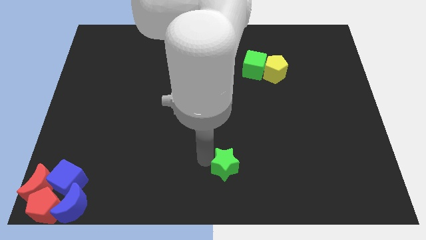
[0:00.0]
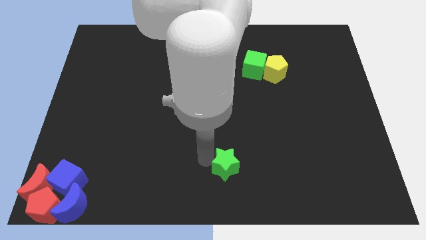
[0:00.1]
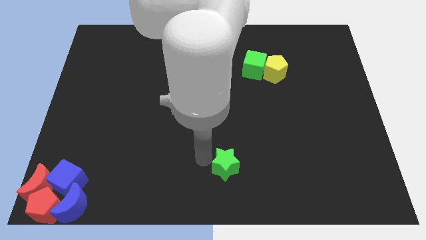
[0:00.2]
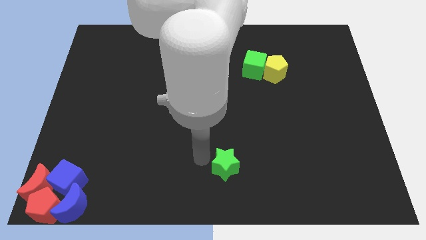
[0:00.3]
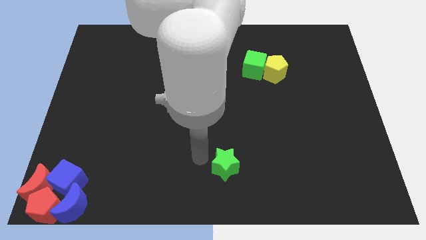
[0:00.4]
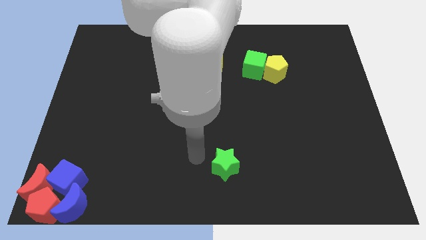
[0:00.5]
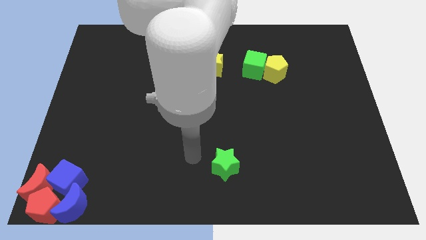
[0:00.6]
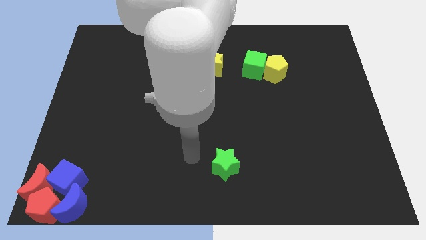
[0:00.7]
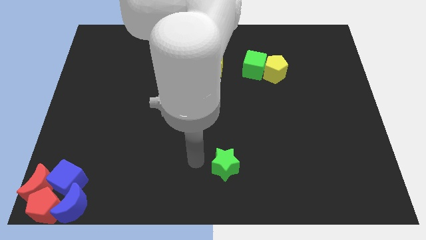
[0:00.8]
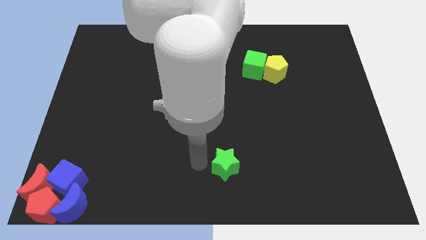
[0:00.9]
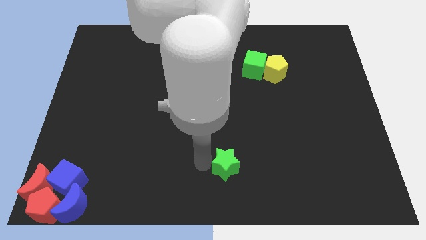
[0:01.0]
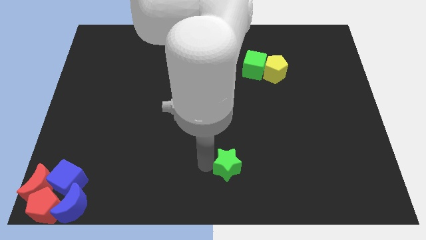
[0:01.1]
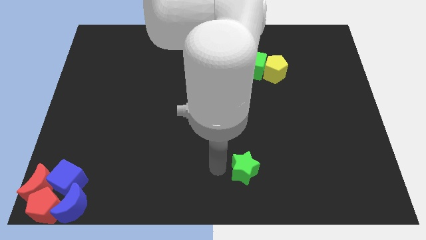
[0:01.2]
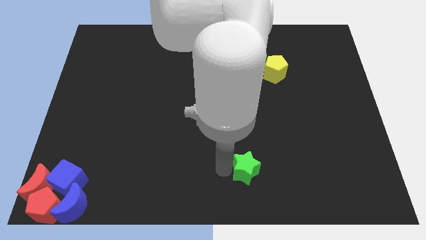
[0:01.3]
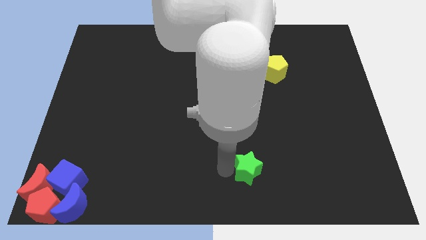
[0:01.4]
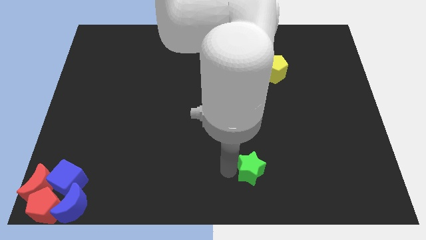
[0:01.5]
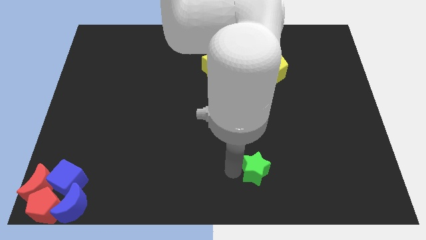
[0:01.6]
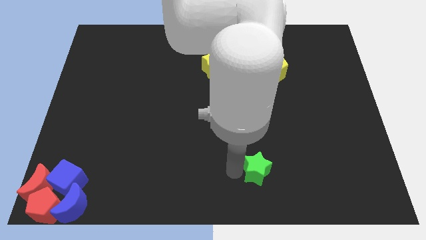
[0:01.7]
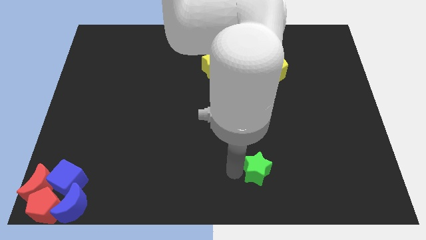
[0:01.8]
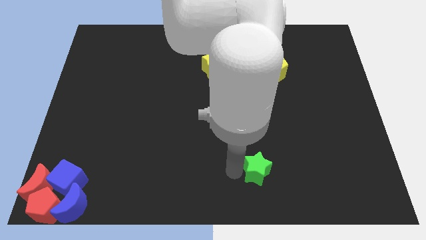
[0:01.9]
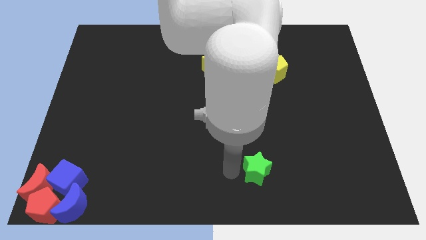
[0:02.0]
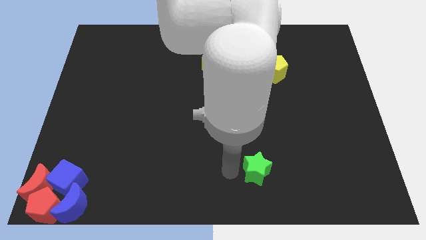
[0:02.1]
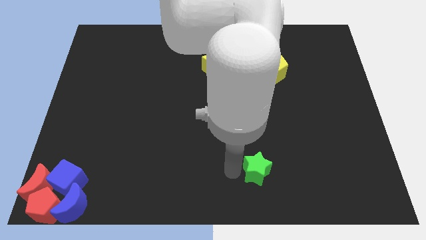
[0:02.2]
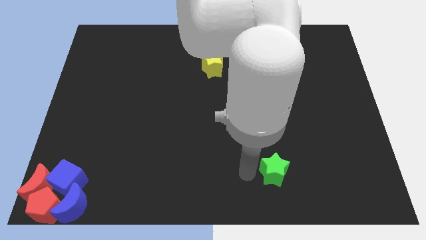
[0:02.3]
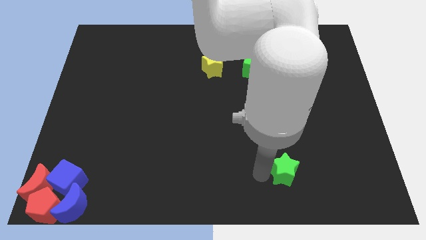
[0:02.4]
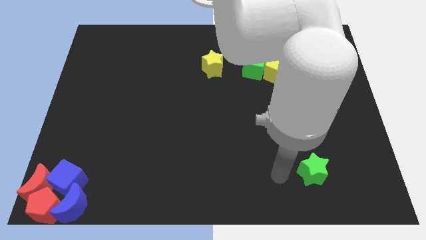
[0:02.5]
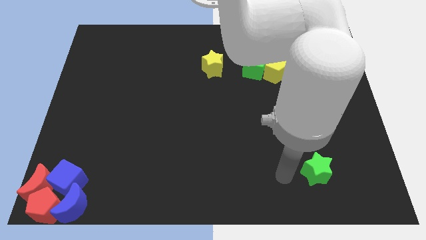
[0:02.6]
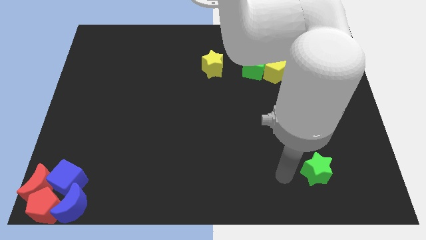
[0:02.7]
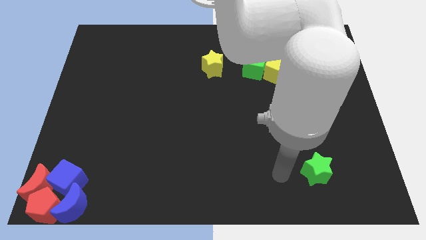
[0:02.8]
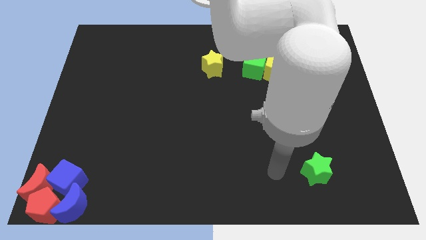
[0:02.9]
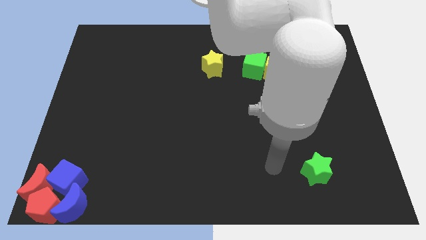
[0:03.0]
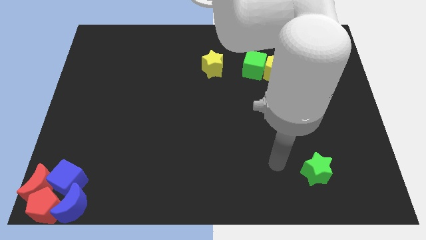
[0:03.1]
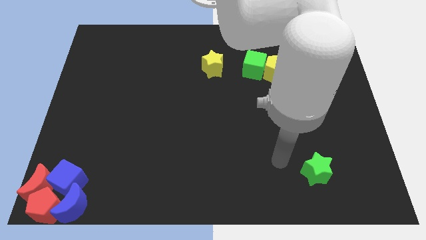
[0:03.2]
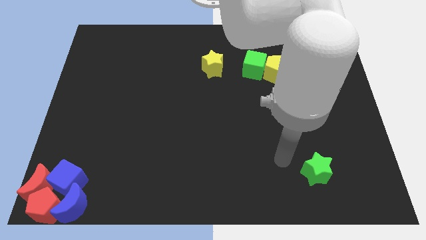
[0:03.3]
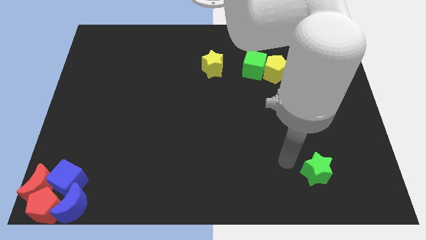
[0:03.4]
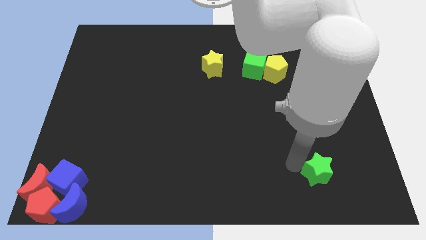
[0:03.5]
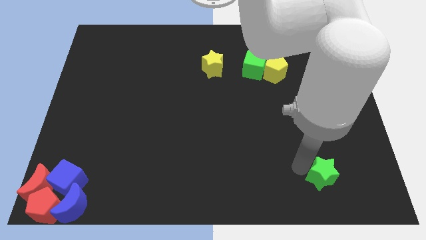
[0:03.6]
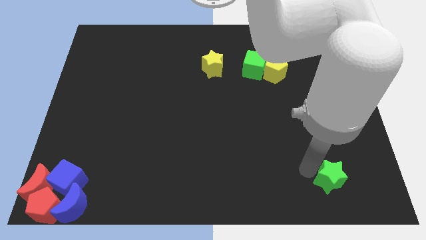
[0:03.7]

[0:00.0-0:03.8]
slide the green star to the bottom right side

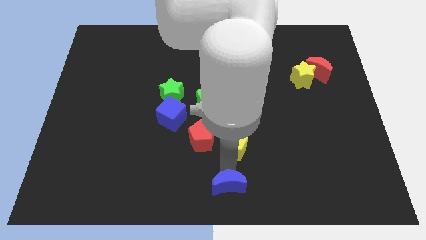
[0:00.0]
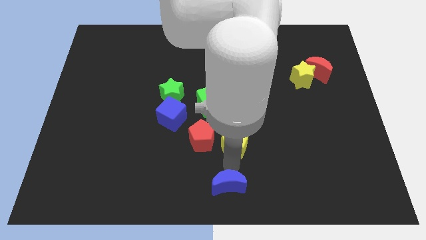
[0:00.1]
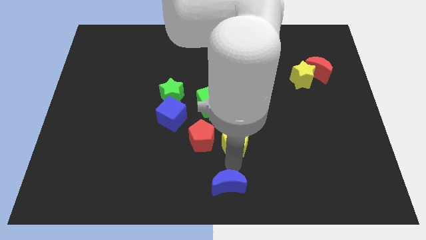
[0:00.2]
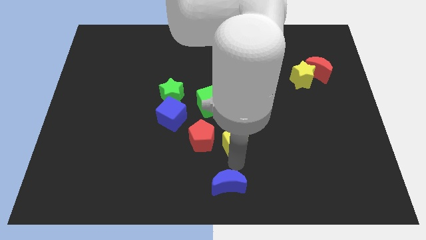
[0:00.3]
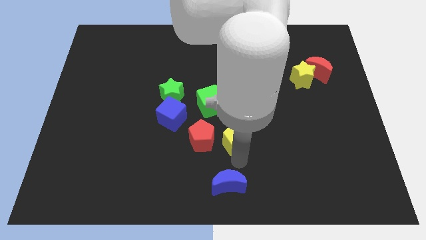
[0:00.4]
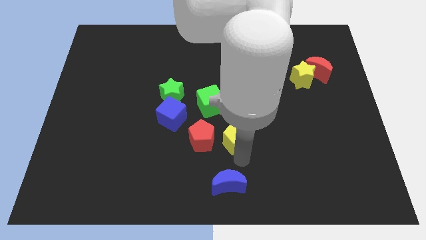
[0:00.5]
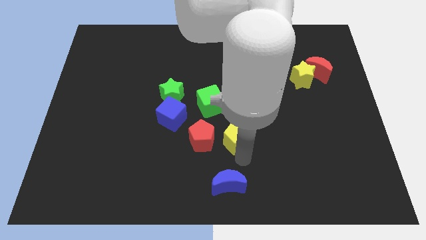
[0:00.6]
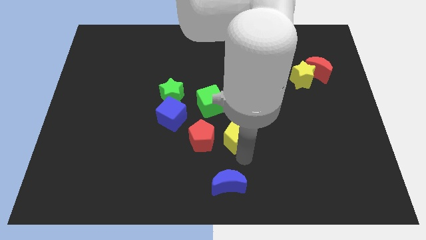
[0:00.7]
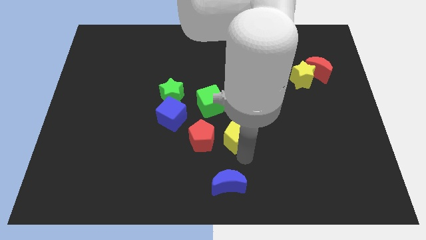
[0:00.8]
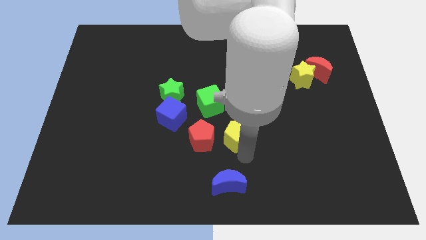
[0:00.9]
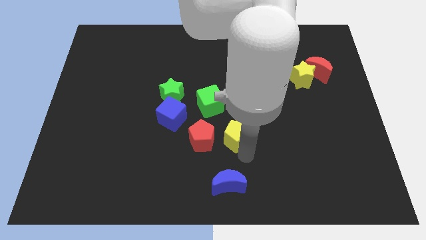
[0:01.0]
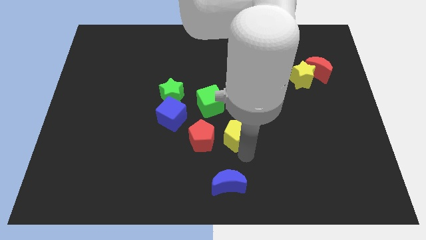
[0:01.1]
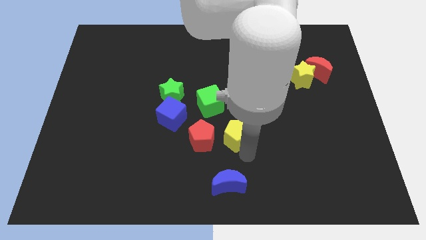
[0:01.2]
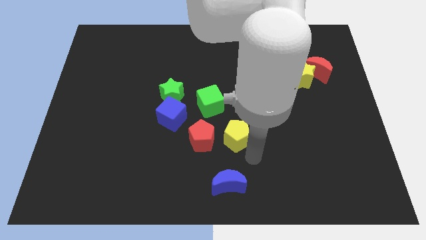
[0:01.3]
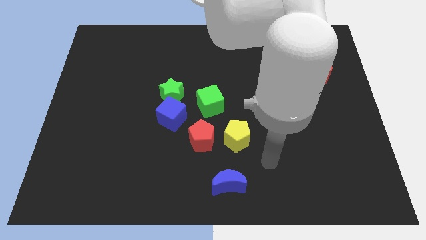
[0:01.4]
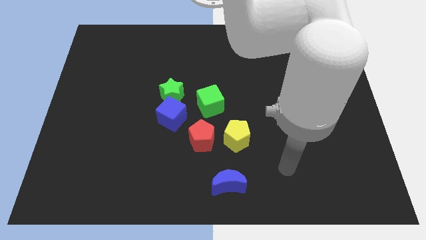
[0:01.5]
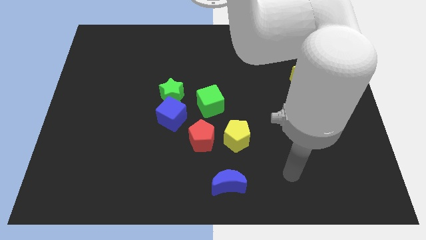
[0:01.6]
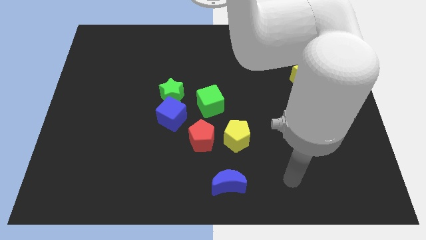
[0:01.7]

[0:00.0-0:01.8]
move the yellow pentagon right to the red pentagon

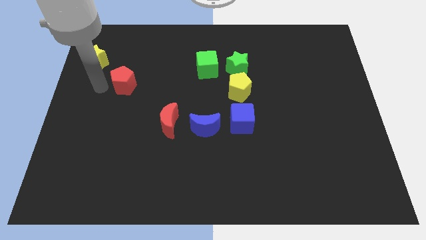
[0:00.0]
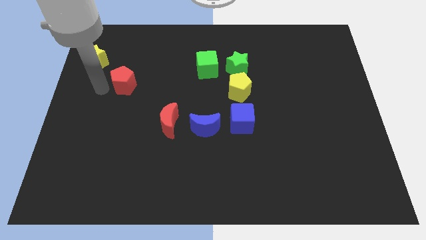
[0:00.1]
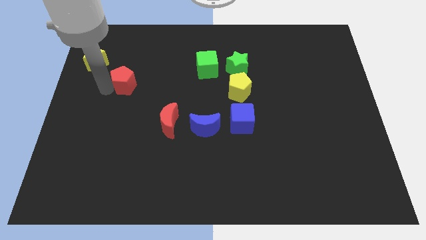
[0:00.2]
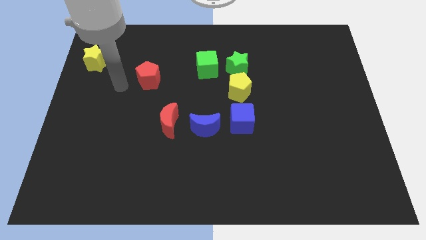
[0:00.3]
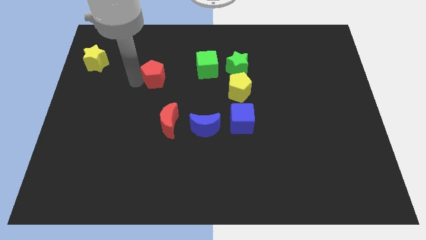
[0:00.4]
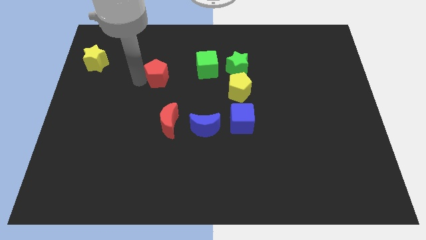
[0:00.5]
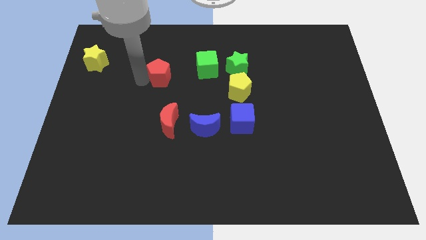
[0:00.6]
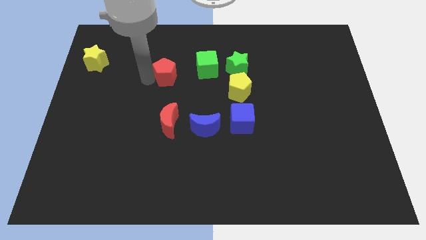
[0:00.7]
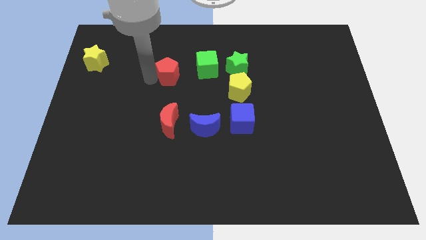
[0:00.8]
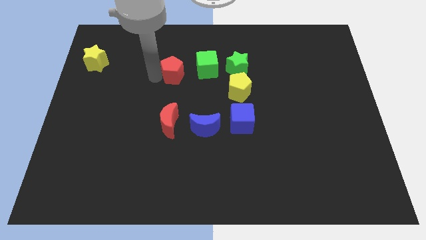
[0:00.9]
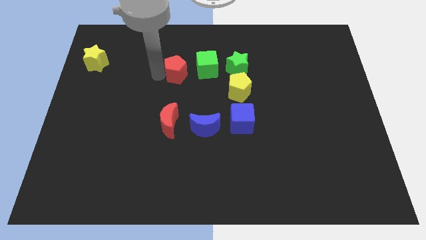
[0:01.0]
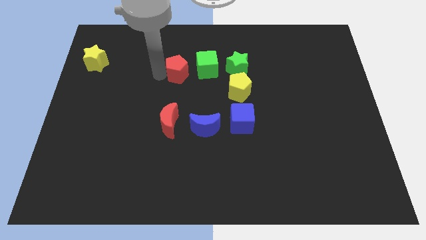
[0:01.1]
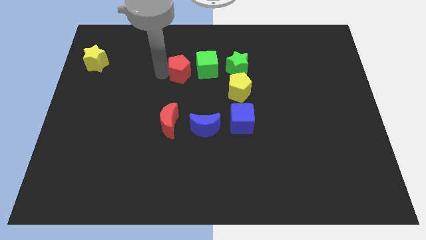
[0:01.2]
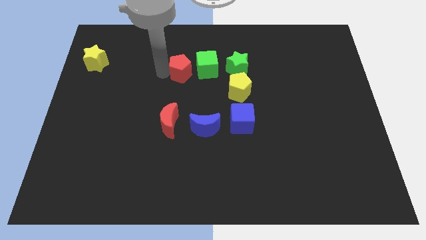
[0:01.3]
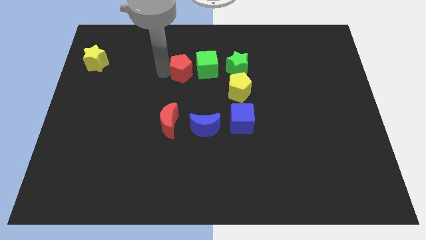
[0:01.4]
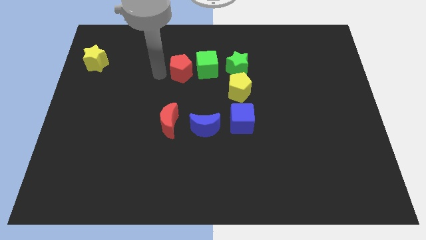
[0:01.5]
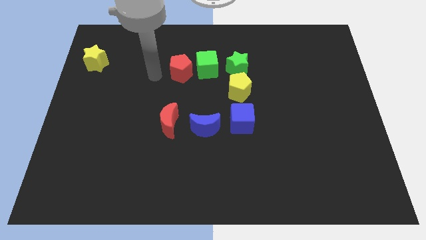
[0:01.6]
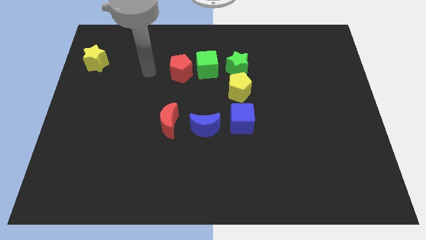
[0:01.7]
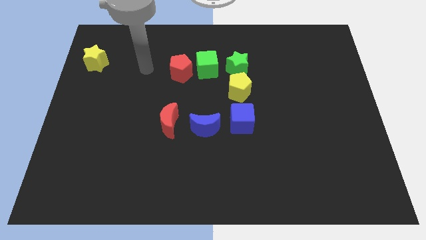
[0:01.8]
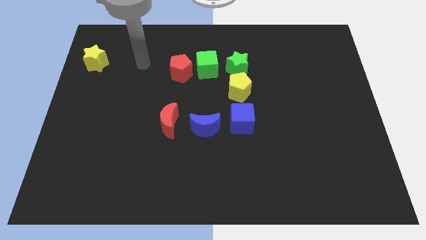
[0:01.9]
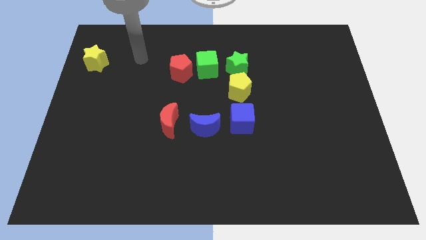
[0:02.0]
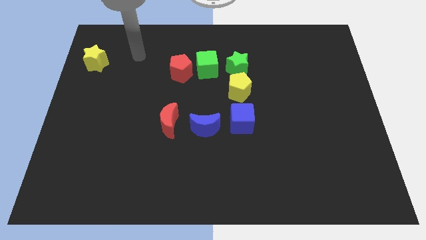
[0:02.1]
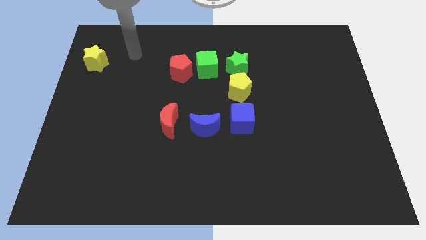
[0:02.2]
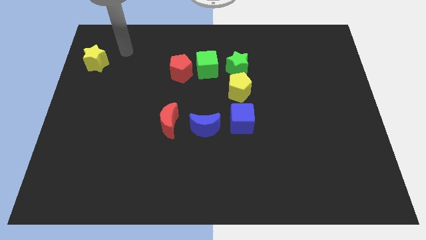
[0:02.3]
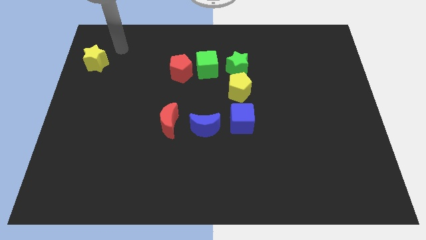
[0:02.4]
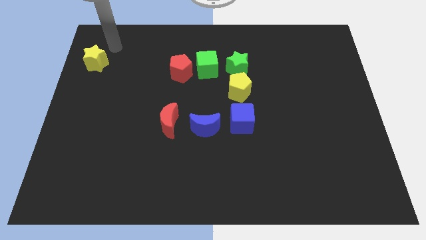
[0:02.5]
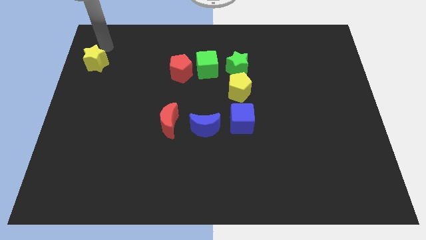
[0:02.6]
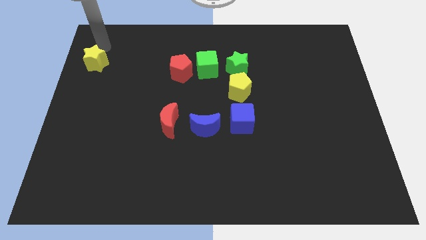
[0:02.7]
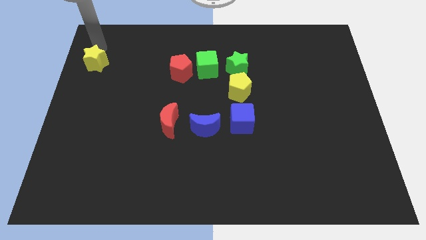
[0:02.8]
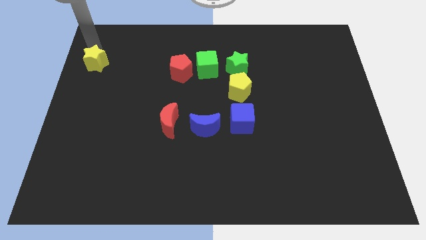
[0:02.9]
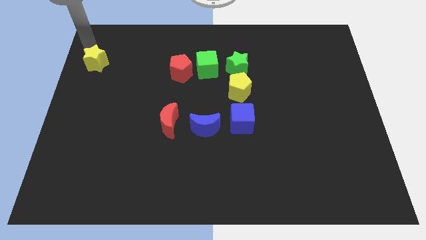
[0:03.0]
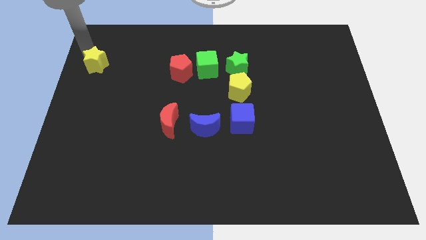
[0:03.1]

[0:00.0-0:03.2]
push the red pentagon to the left of green cube

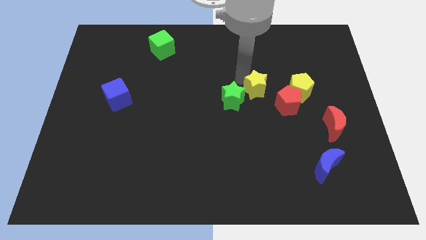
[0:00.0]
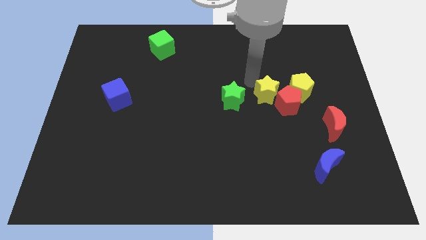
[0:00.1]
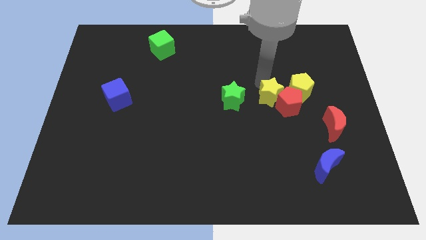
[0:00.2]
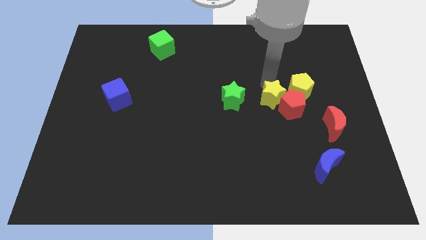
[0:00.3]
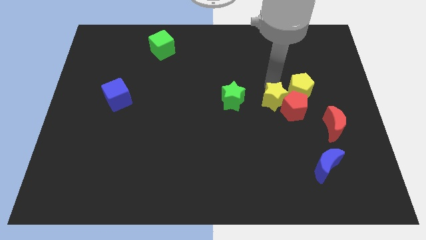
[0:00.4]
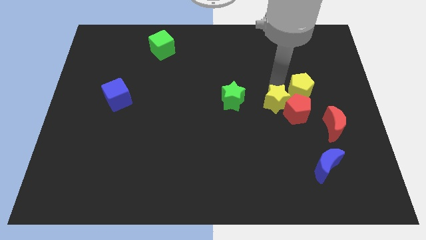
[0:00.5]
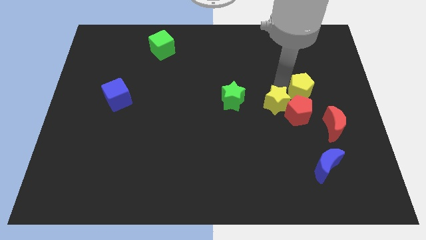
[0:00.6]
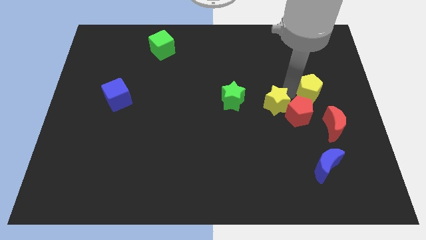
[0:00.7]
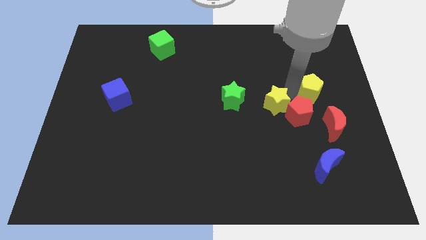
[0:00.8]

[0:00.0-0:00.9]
push the yellow star into the red pentagon
